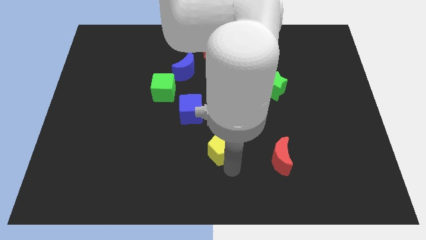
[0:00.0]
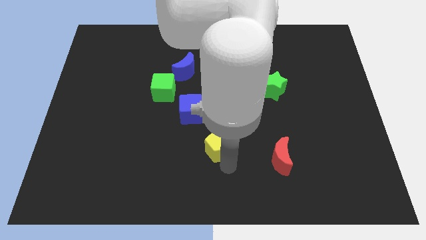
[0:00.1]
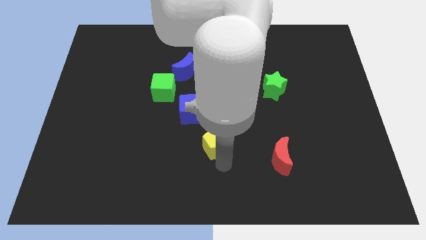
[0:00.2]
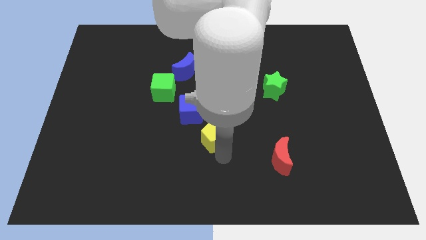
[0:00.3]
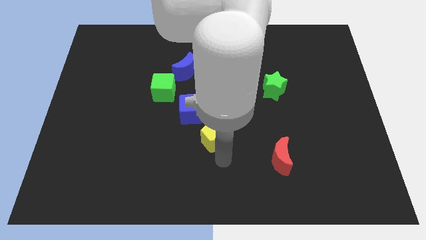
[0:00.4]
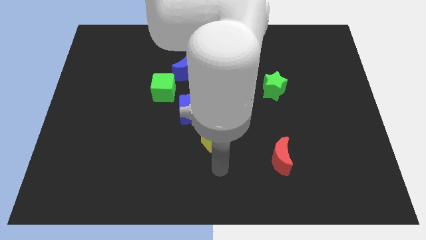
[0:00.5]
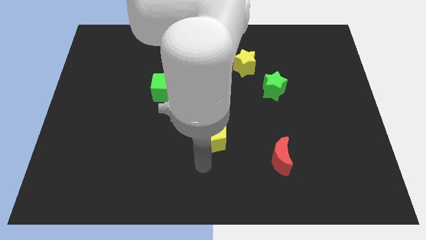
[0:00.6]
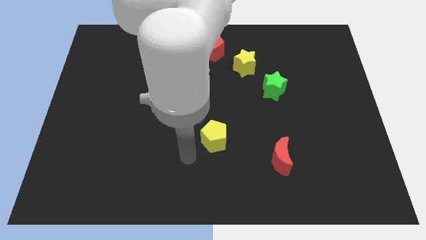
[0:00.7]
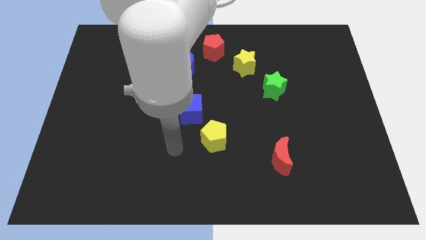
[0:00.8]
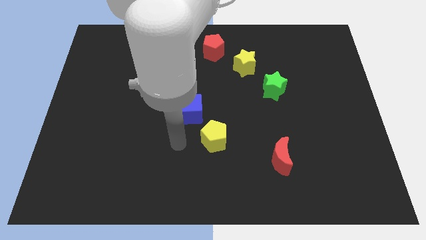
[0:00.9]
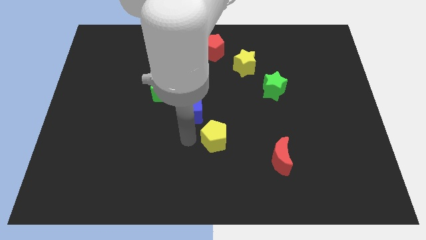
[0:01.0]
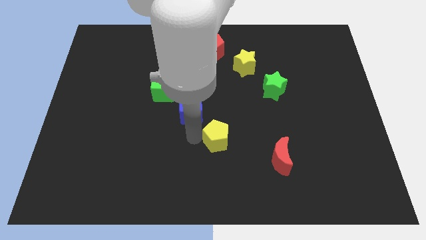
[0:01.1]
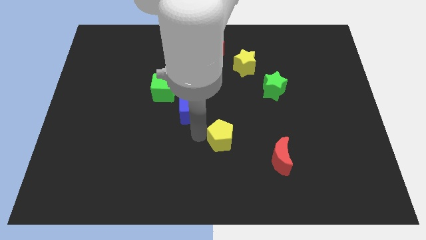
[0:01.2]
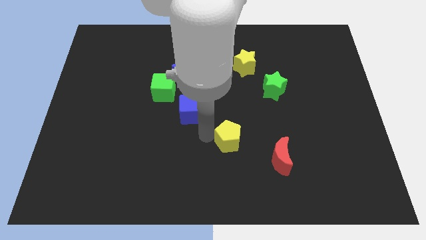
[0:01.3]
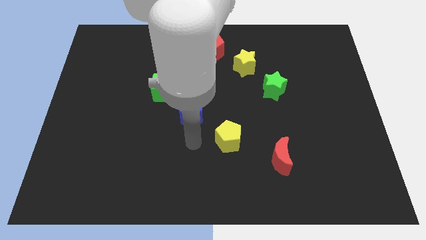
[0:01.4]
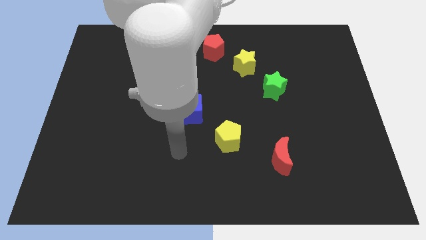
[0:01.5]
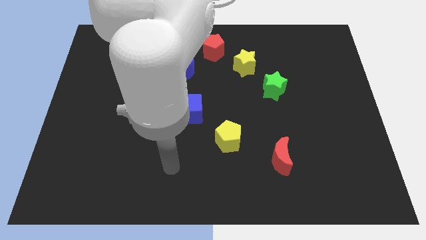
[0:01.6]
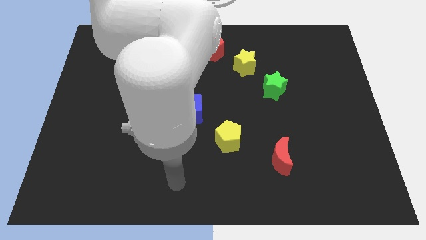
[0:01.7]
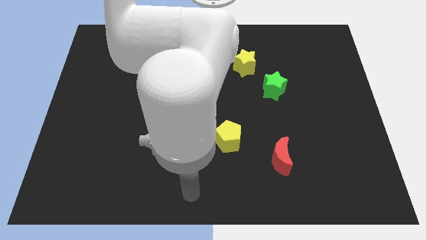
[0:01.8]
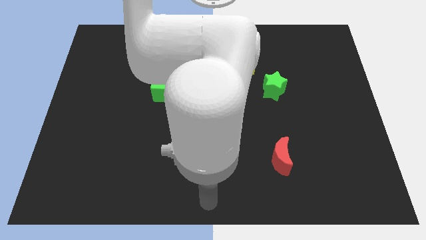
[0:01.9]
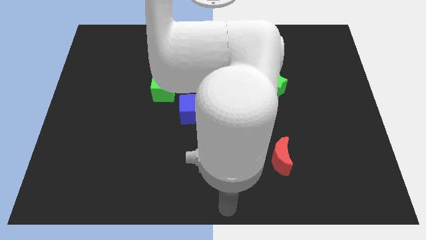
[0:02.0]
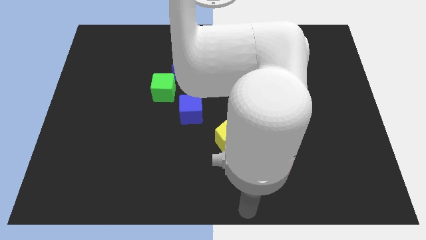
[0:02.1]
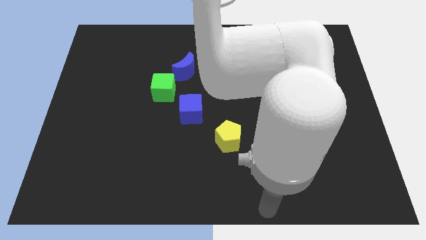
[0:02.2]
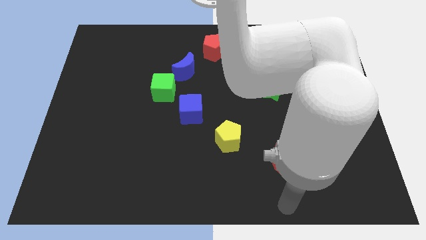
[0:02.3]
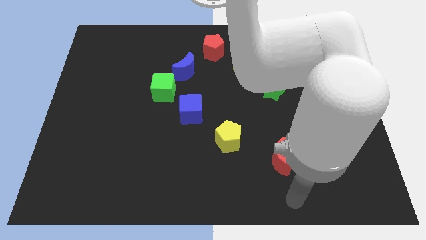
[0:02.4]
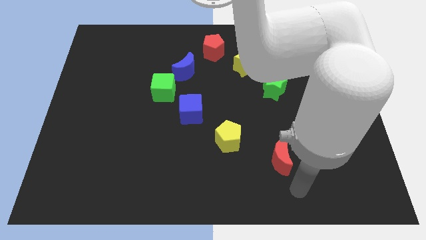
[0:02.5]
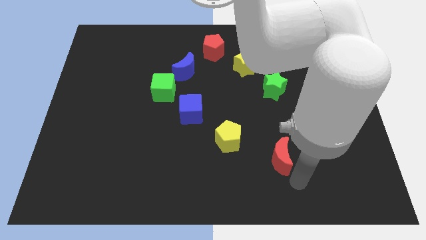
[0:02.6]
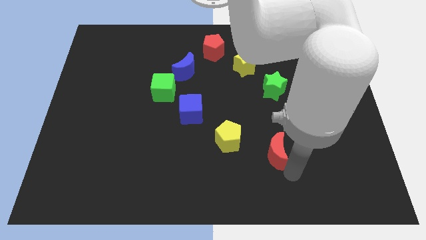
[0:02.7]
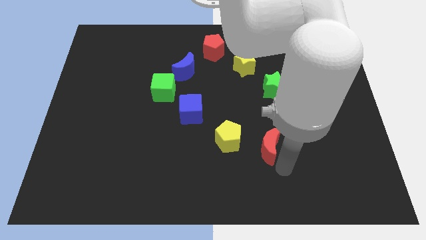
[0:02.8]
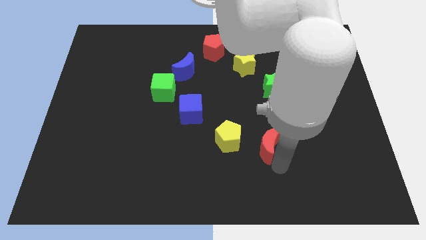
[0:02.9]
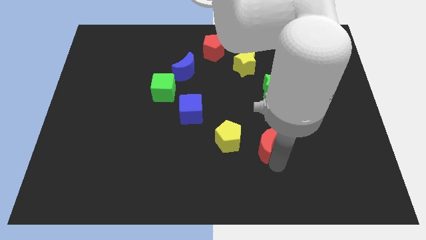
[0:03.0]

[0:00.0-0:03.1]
place the yellow pentagon diagonally to the bottom right of the blue cube

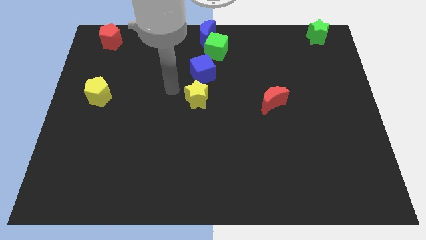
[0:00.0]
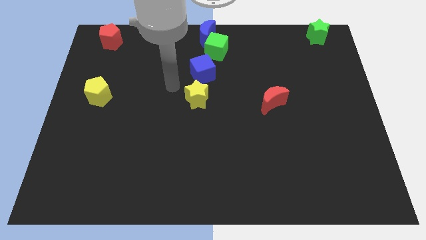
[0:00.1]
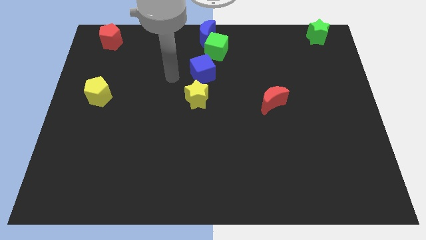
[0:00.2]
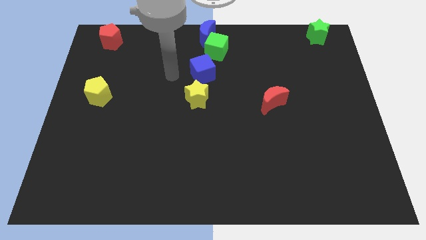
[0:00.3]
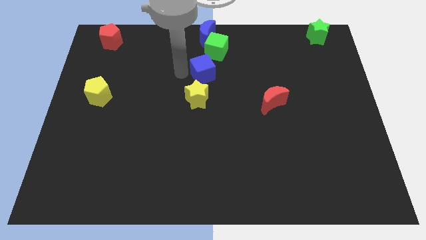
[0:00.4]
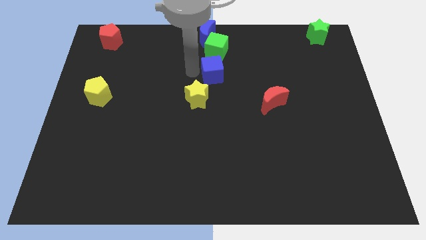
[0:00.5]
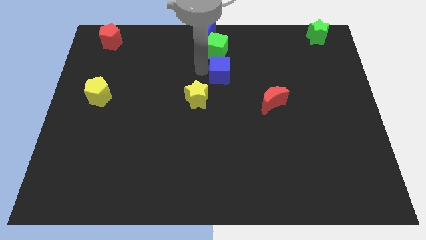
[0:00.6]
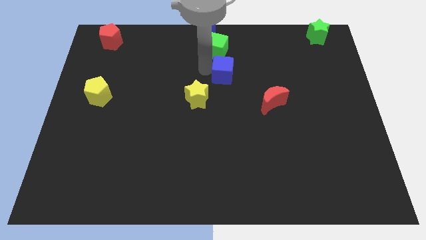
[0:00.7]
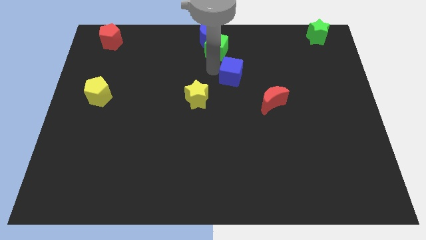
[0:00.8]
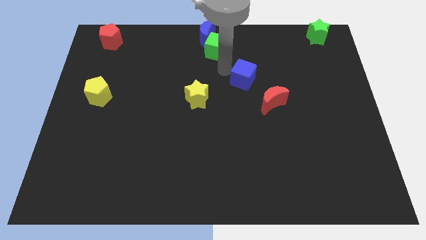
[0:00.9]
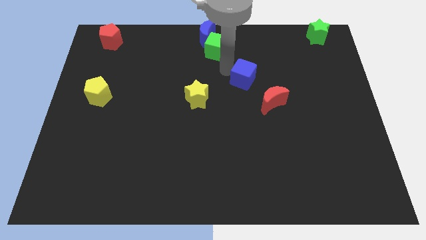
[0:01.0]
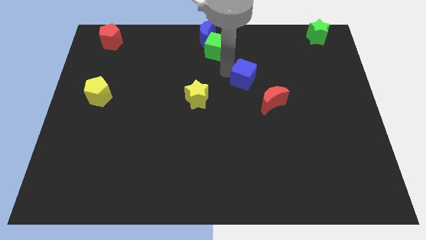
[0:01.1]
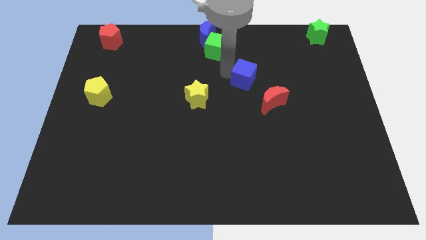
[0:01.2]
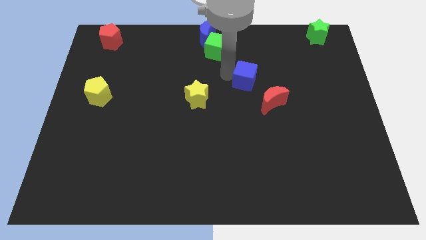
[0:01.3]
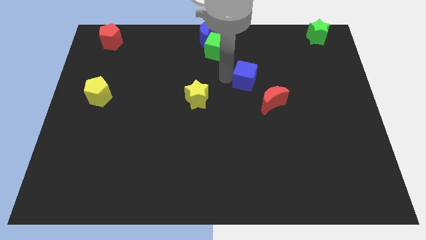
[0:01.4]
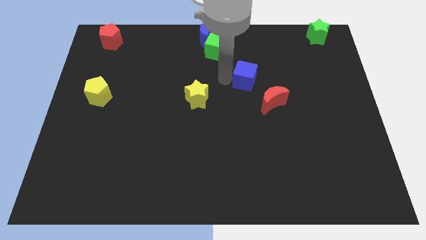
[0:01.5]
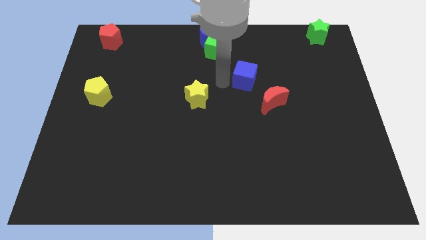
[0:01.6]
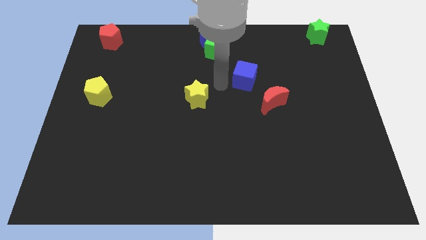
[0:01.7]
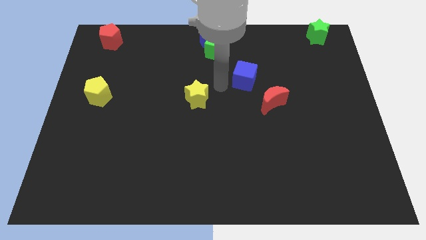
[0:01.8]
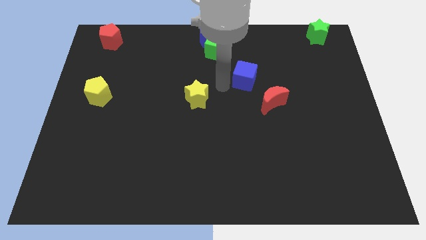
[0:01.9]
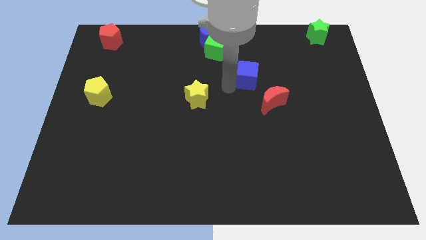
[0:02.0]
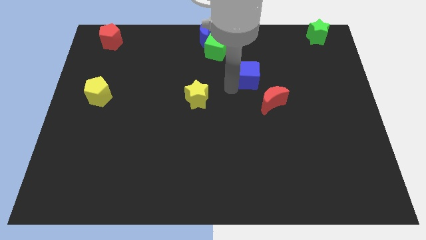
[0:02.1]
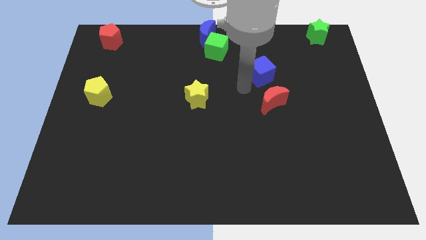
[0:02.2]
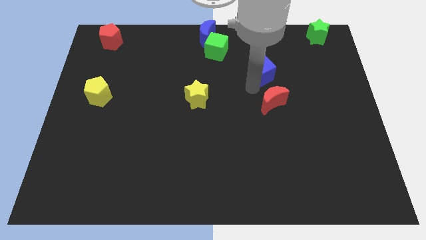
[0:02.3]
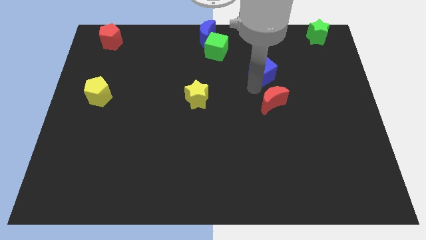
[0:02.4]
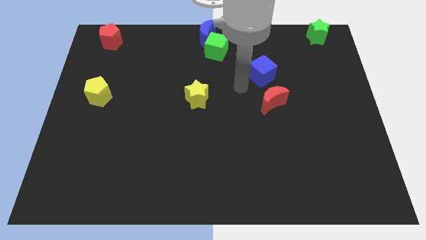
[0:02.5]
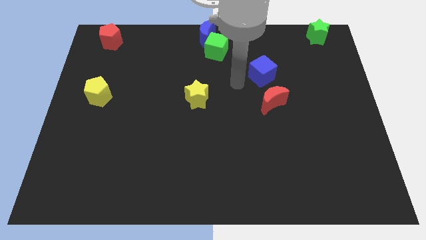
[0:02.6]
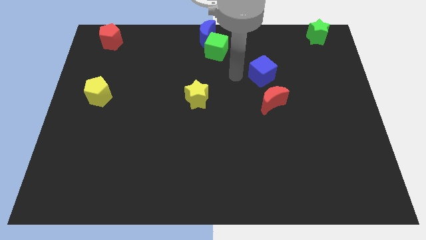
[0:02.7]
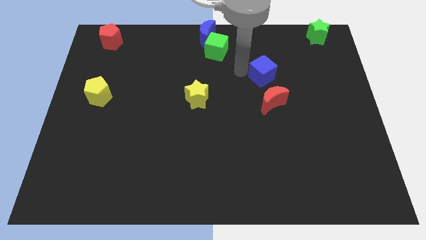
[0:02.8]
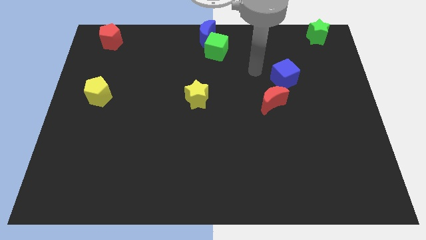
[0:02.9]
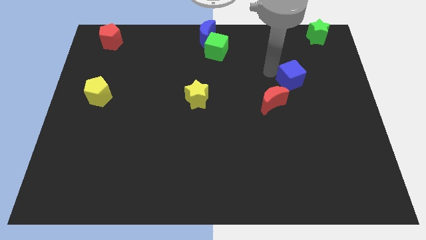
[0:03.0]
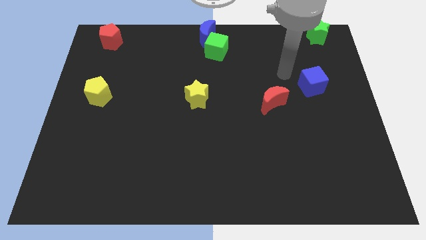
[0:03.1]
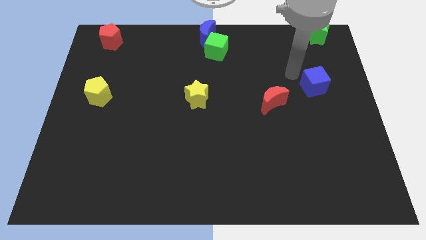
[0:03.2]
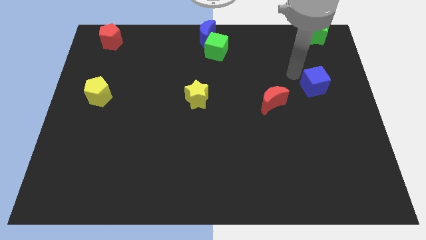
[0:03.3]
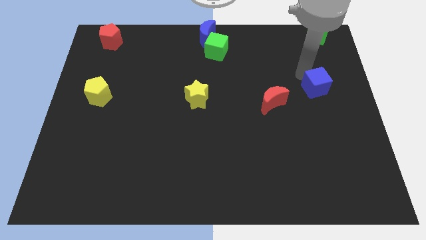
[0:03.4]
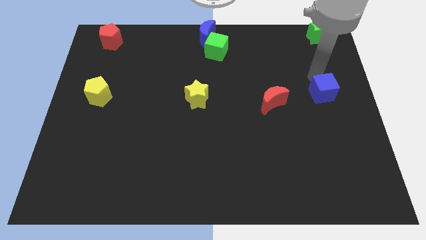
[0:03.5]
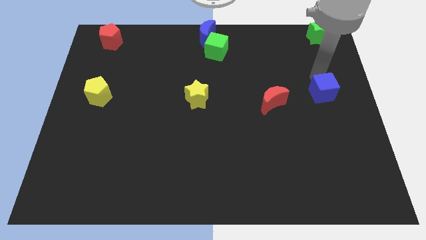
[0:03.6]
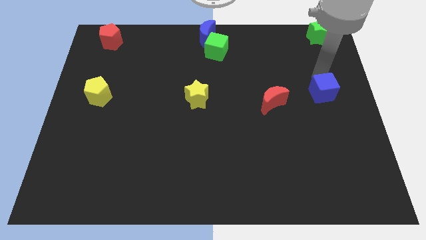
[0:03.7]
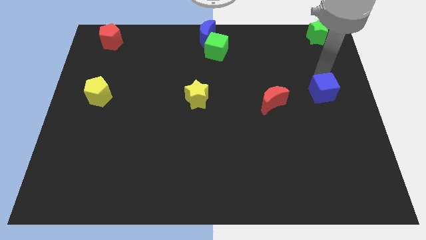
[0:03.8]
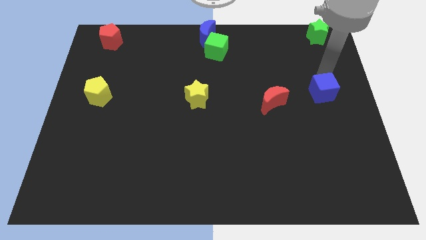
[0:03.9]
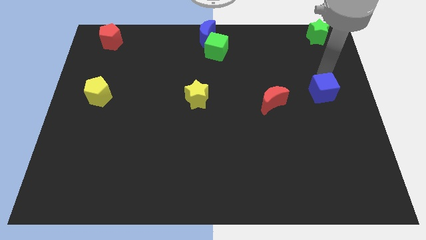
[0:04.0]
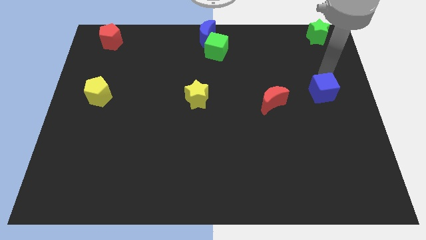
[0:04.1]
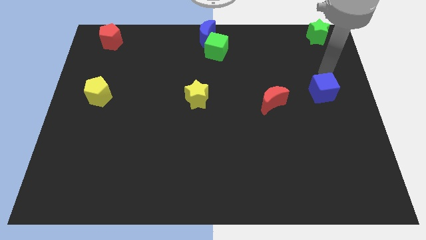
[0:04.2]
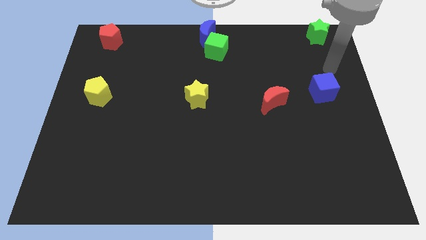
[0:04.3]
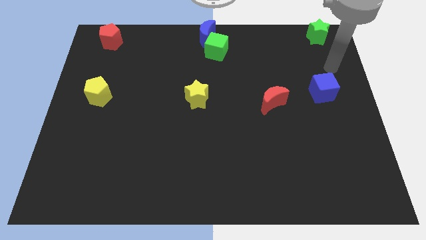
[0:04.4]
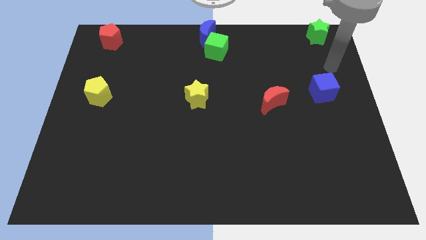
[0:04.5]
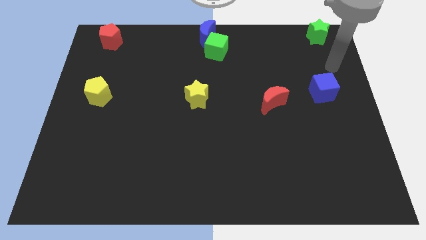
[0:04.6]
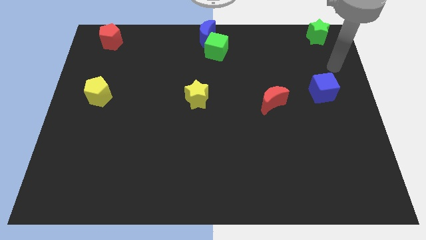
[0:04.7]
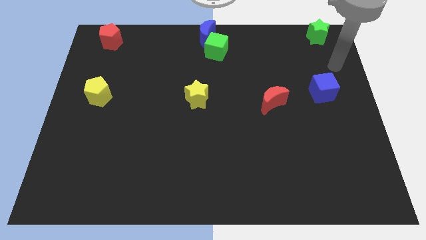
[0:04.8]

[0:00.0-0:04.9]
move the blue cube right beside the red moon

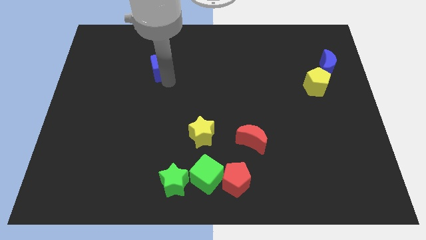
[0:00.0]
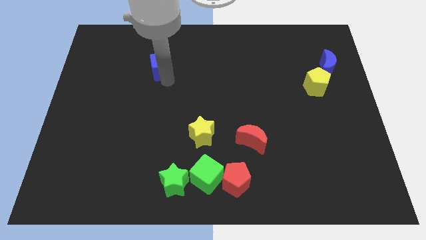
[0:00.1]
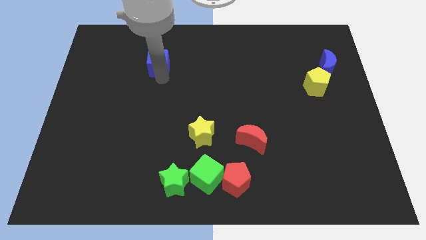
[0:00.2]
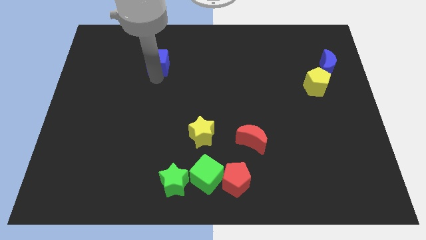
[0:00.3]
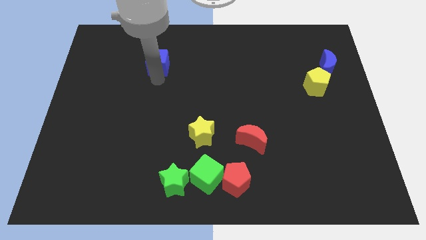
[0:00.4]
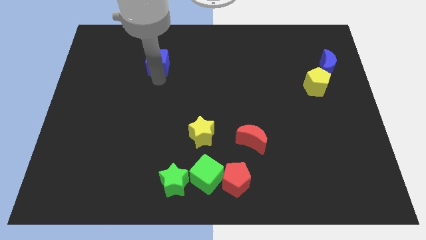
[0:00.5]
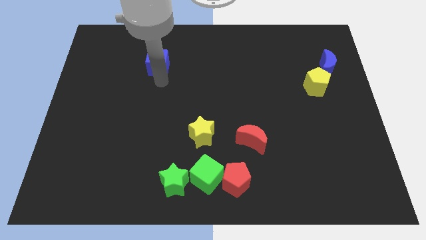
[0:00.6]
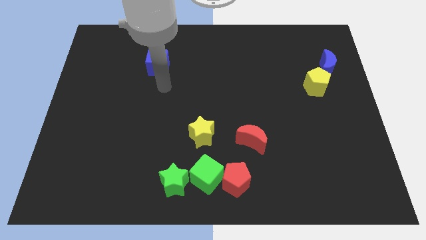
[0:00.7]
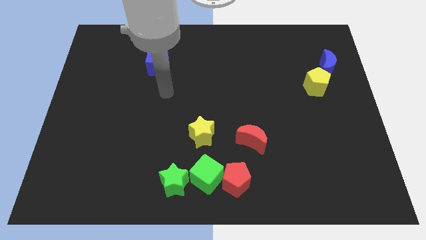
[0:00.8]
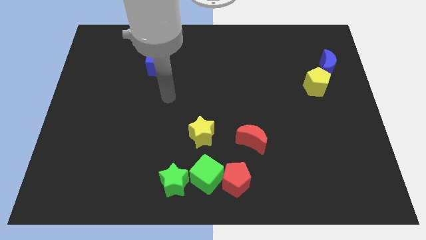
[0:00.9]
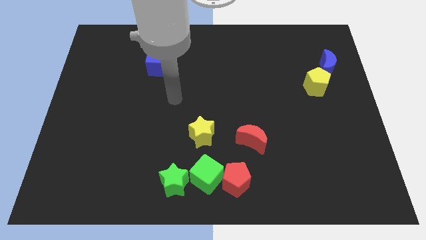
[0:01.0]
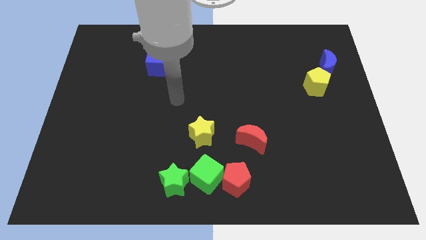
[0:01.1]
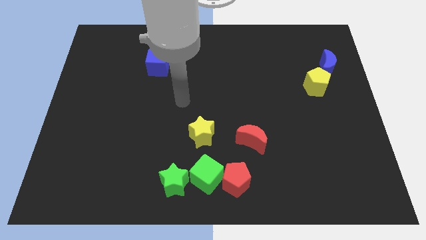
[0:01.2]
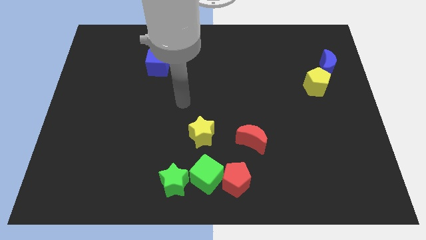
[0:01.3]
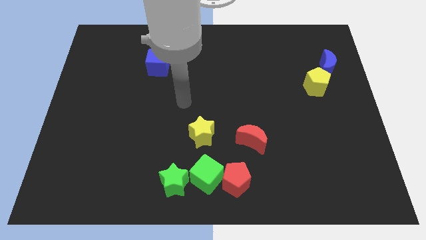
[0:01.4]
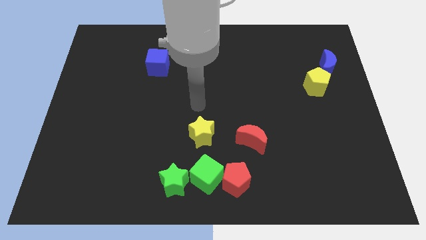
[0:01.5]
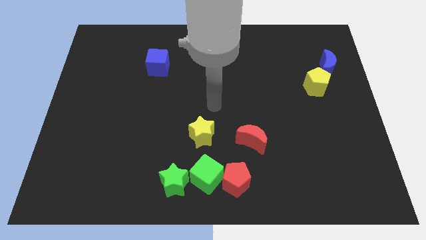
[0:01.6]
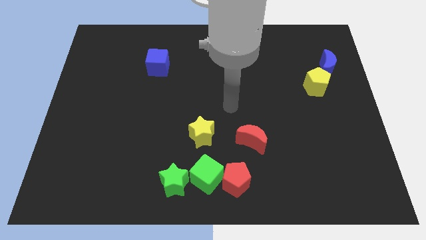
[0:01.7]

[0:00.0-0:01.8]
move your arm away from the blue cube
